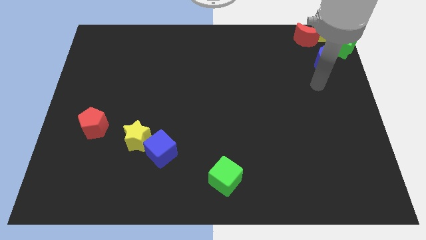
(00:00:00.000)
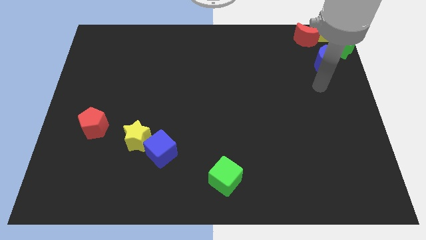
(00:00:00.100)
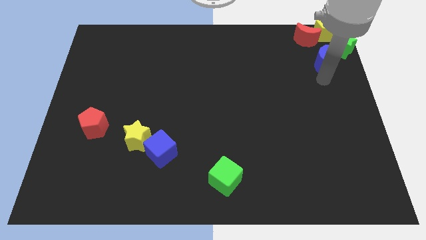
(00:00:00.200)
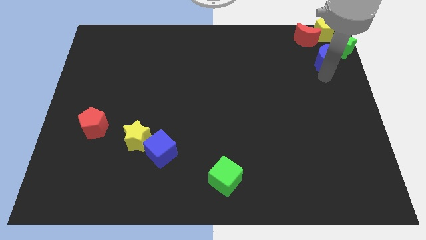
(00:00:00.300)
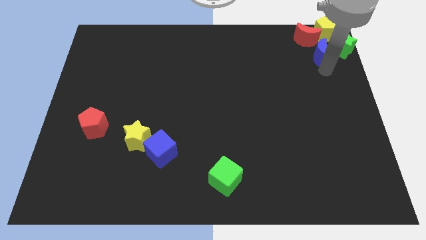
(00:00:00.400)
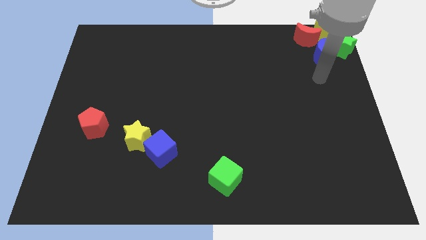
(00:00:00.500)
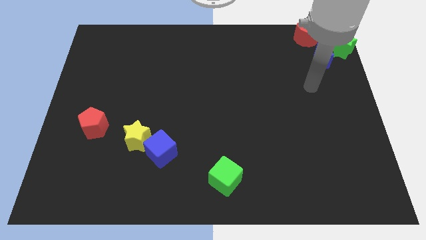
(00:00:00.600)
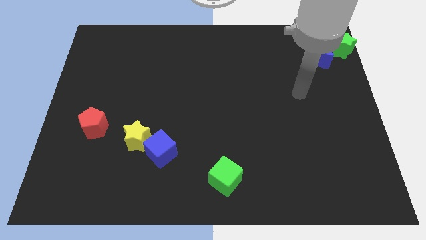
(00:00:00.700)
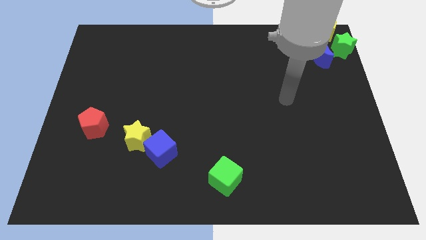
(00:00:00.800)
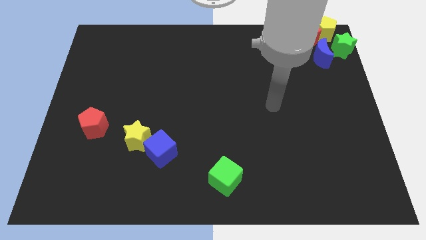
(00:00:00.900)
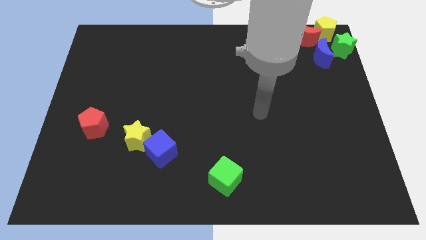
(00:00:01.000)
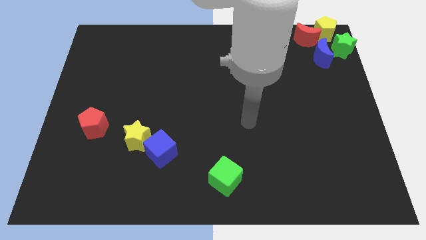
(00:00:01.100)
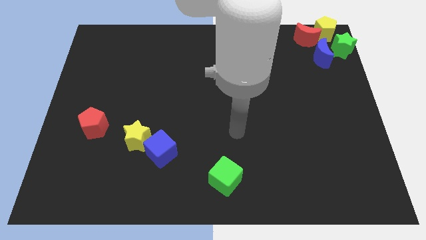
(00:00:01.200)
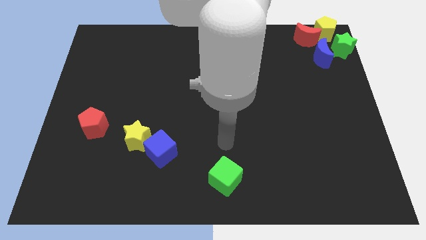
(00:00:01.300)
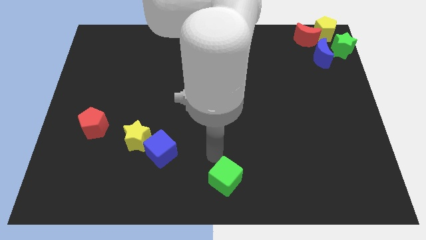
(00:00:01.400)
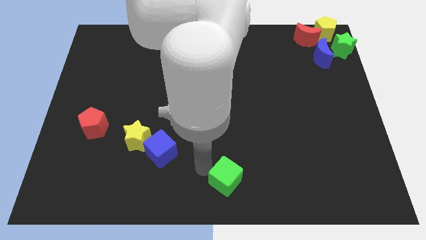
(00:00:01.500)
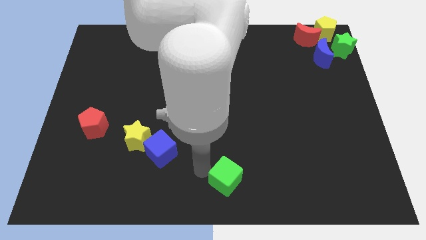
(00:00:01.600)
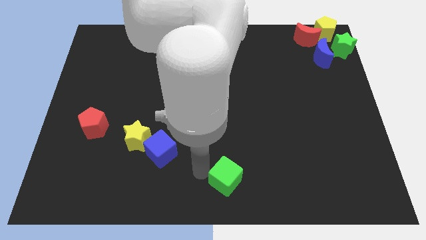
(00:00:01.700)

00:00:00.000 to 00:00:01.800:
move your arm beside green cube

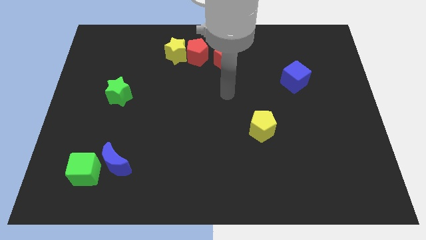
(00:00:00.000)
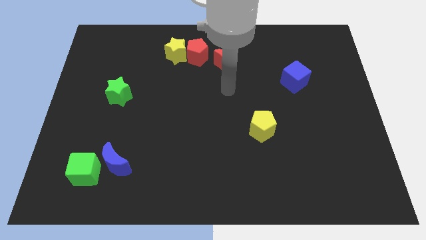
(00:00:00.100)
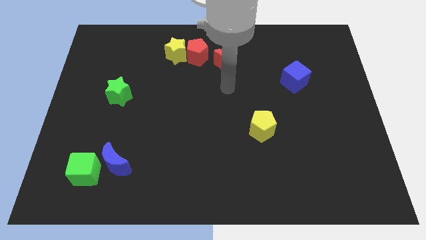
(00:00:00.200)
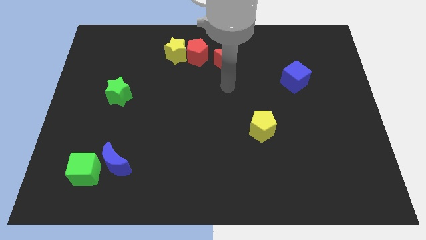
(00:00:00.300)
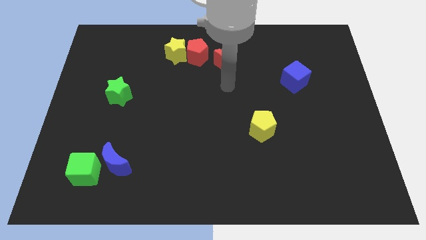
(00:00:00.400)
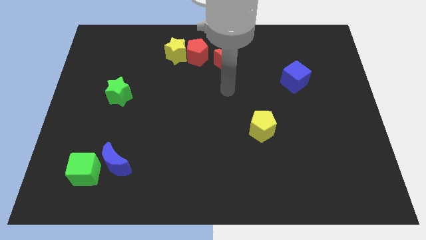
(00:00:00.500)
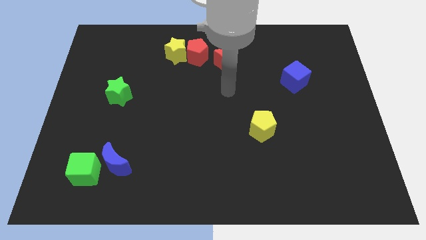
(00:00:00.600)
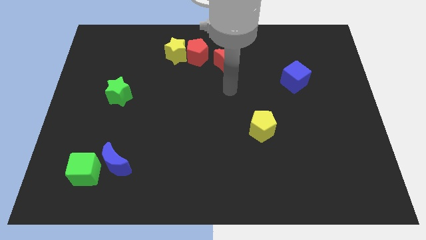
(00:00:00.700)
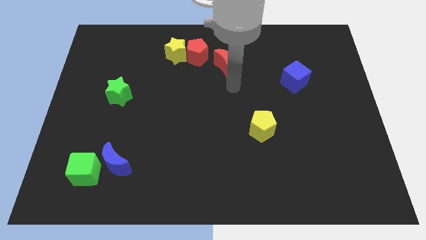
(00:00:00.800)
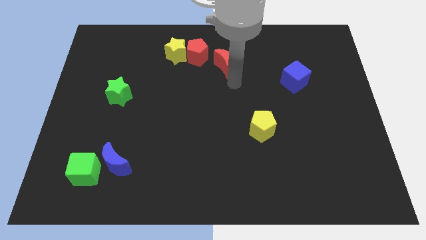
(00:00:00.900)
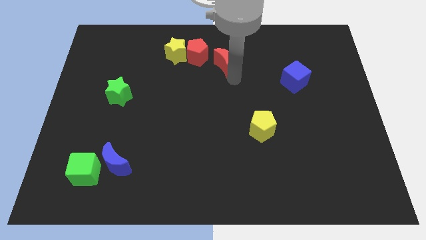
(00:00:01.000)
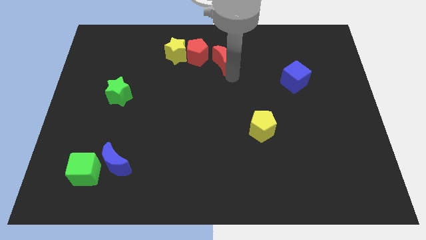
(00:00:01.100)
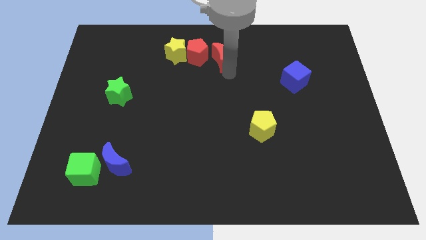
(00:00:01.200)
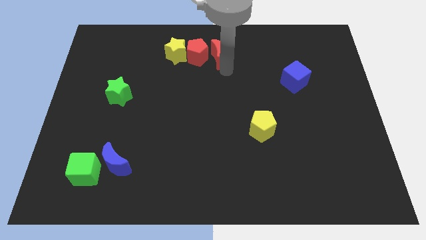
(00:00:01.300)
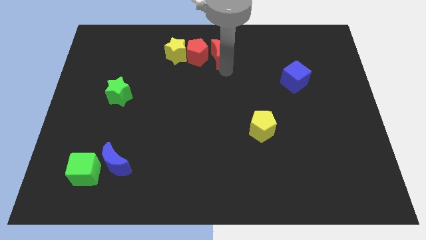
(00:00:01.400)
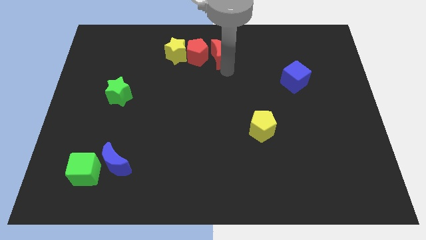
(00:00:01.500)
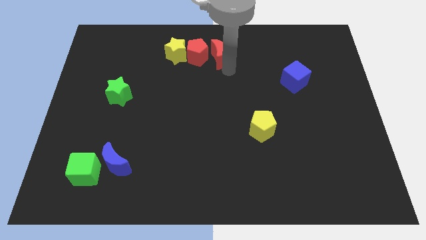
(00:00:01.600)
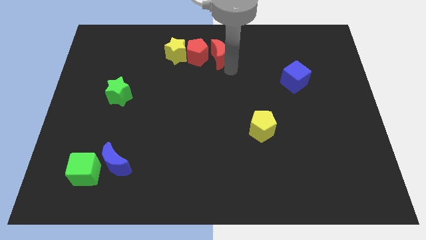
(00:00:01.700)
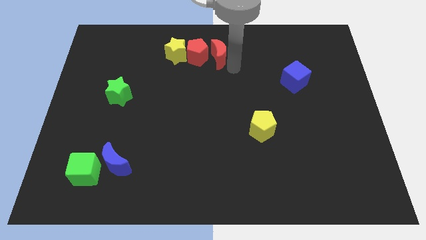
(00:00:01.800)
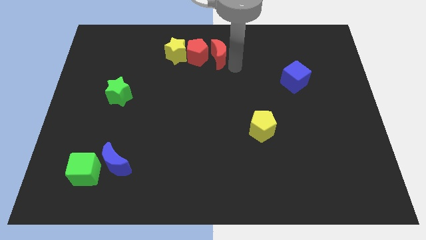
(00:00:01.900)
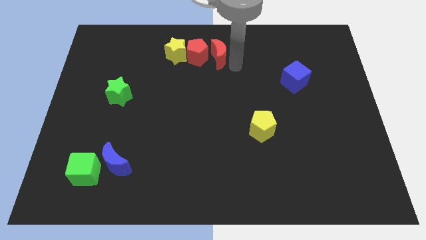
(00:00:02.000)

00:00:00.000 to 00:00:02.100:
slightly push red moon beside red pentagon on top center of the board

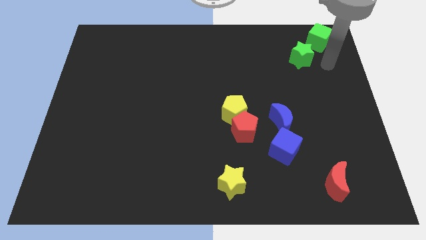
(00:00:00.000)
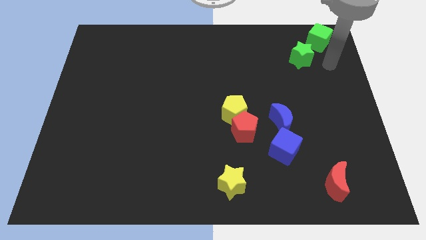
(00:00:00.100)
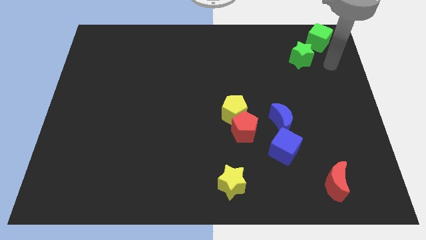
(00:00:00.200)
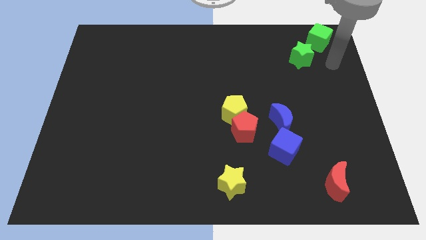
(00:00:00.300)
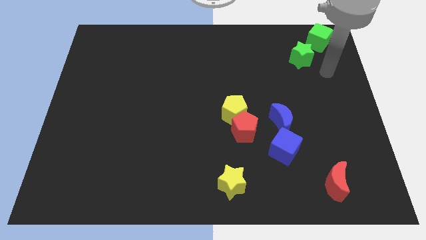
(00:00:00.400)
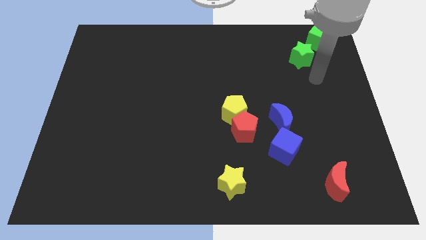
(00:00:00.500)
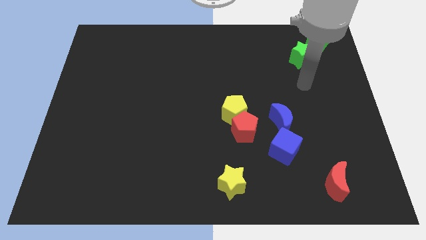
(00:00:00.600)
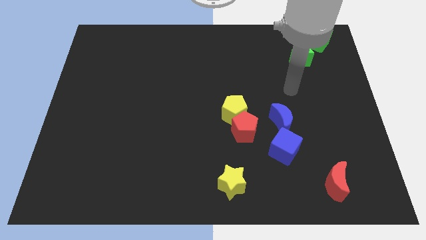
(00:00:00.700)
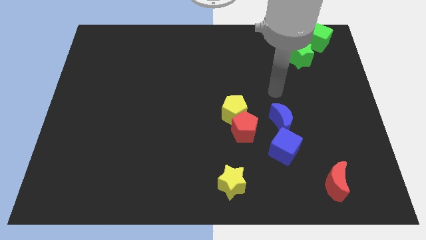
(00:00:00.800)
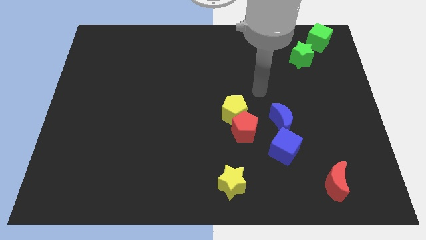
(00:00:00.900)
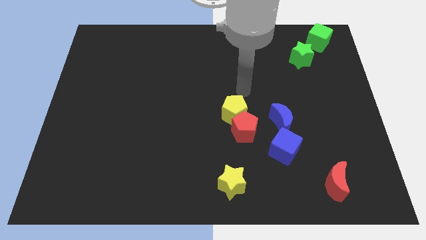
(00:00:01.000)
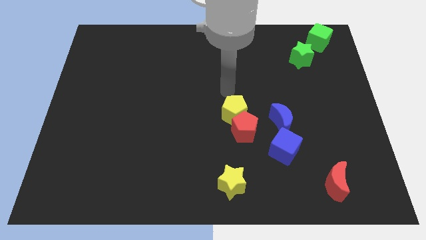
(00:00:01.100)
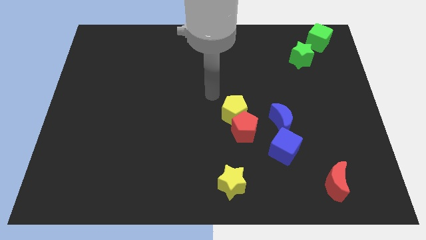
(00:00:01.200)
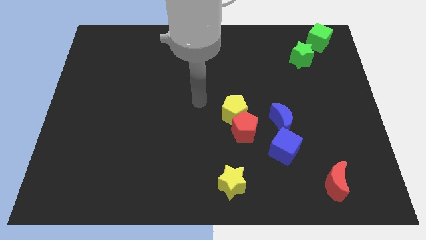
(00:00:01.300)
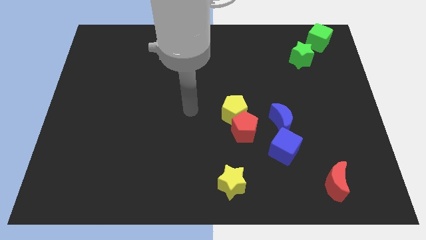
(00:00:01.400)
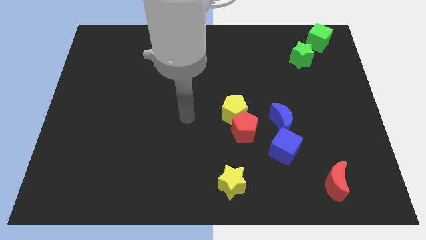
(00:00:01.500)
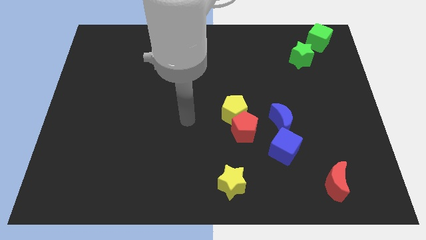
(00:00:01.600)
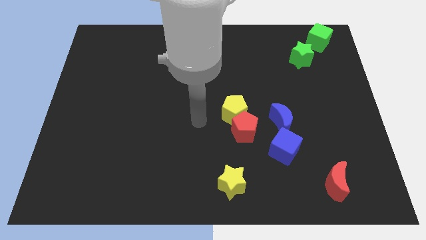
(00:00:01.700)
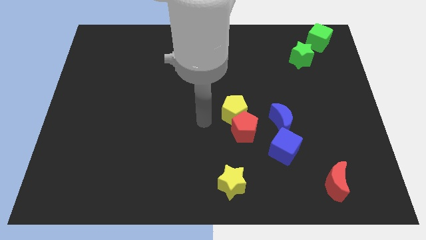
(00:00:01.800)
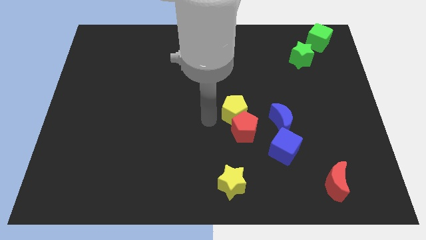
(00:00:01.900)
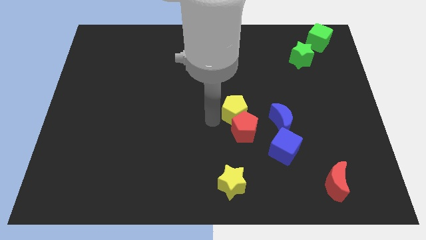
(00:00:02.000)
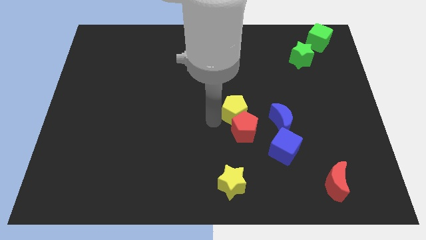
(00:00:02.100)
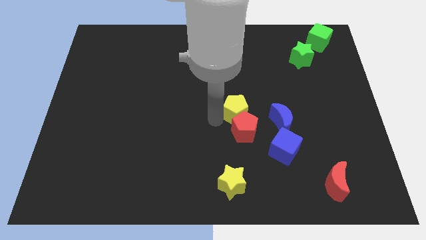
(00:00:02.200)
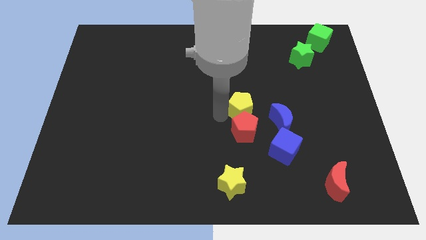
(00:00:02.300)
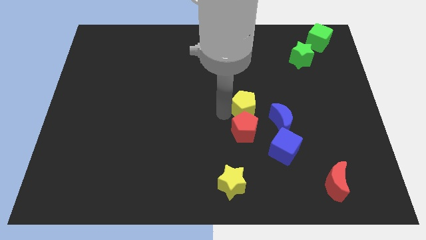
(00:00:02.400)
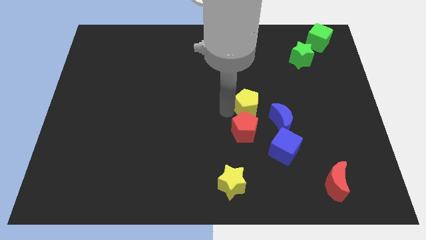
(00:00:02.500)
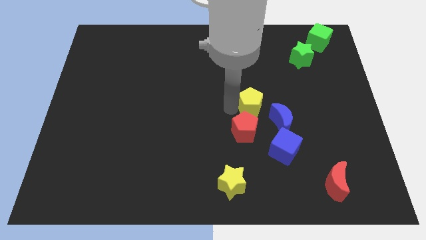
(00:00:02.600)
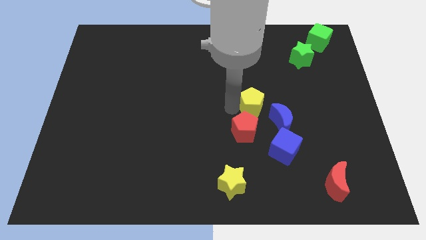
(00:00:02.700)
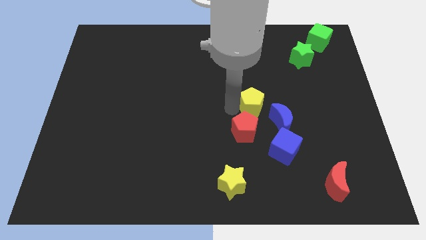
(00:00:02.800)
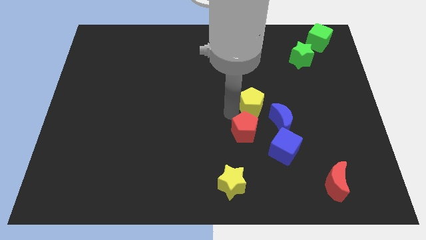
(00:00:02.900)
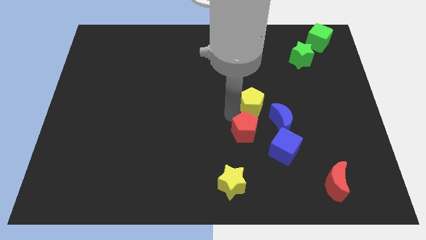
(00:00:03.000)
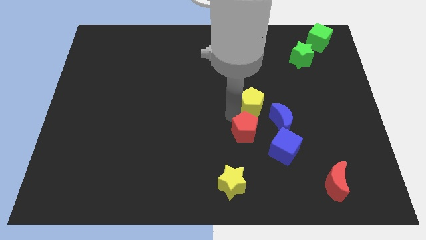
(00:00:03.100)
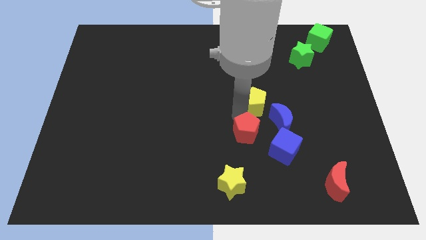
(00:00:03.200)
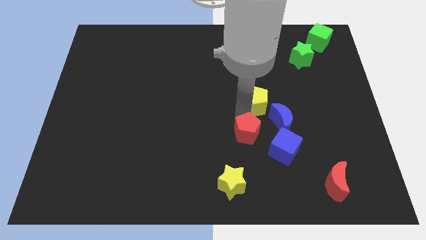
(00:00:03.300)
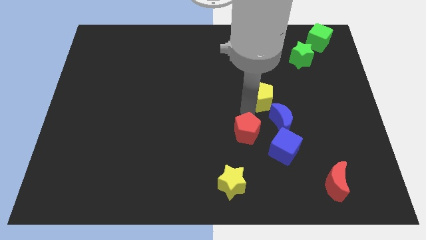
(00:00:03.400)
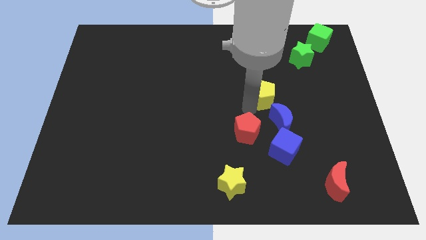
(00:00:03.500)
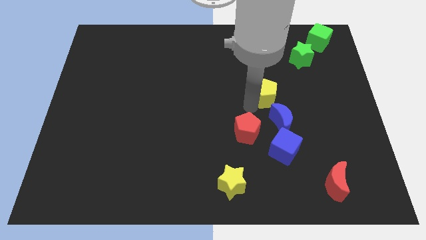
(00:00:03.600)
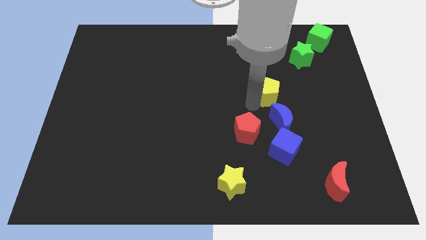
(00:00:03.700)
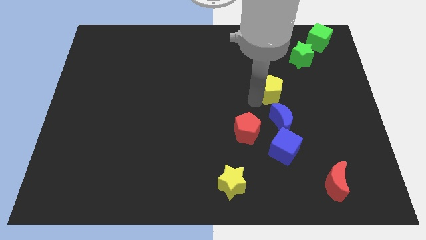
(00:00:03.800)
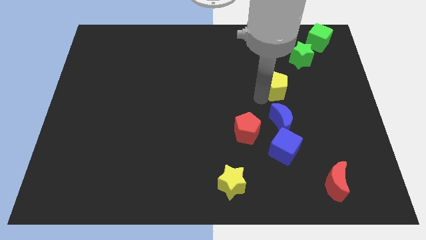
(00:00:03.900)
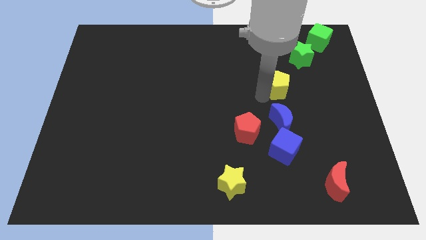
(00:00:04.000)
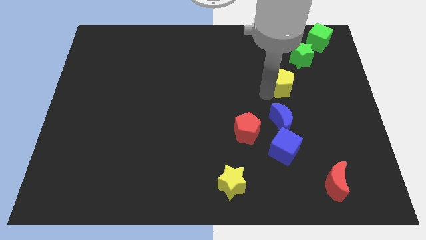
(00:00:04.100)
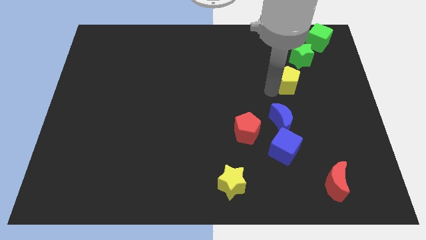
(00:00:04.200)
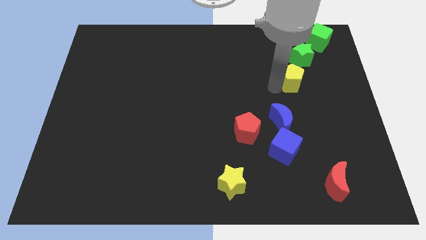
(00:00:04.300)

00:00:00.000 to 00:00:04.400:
slide the yelllow pentagon towards the bottom side of the green star

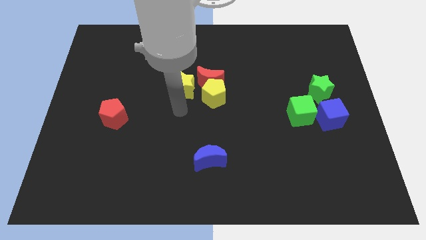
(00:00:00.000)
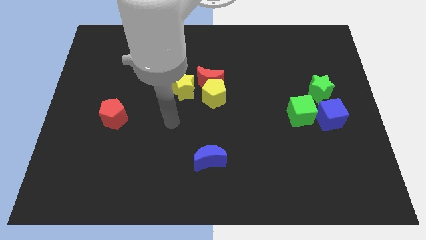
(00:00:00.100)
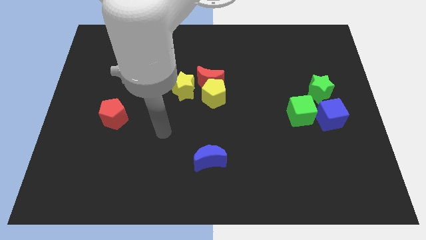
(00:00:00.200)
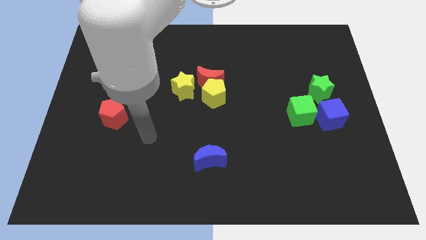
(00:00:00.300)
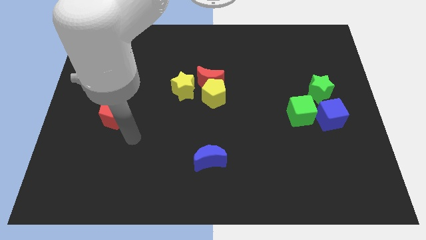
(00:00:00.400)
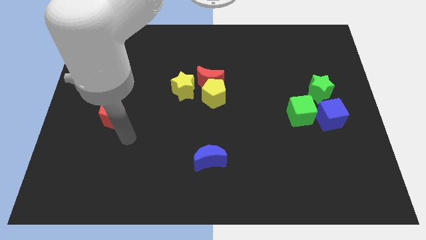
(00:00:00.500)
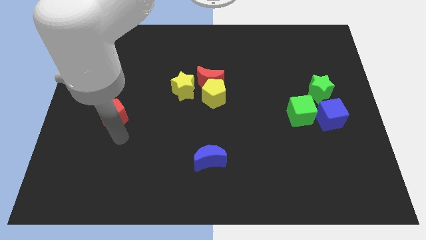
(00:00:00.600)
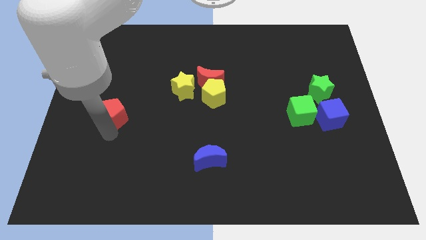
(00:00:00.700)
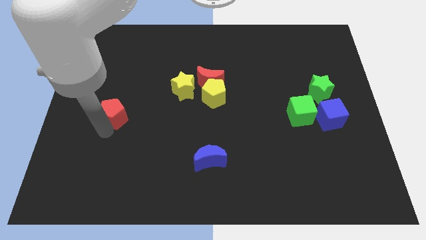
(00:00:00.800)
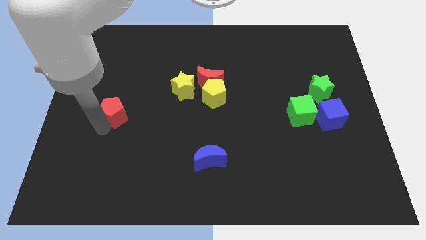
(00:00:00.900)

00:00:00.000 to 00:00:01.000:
move the arm towards the bottom of the red pentagon
